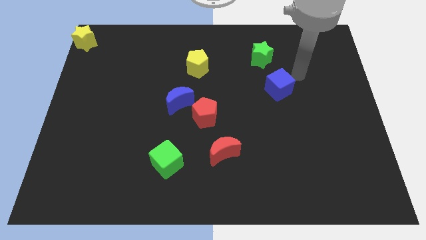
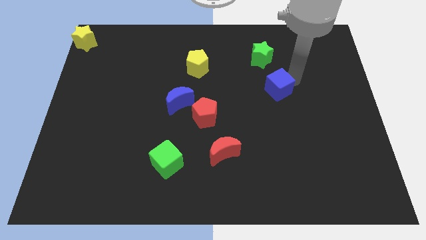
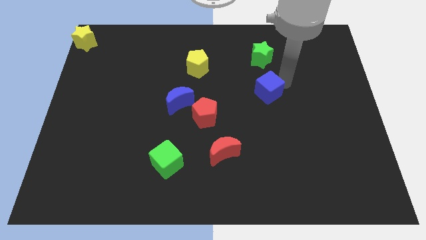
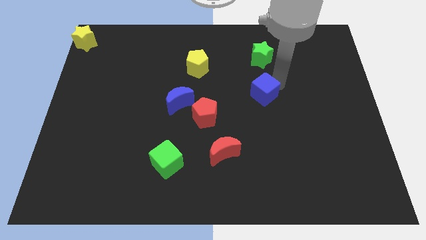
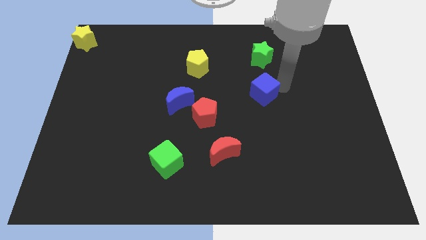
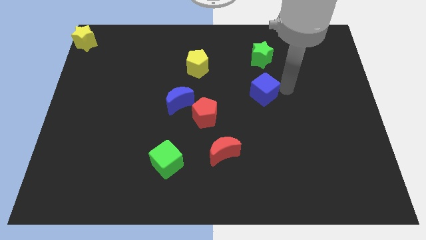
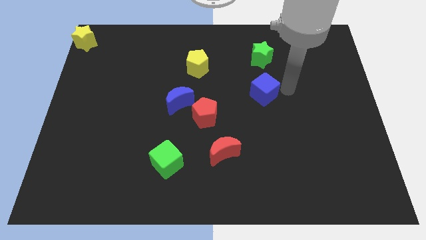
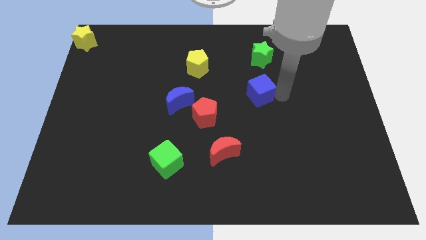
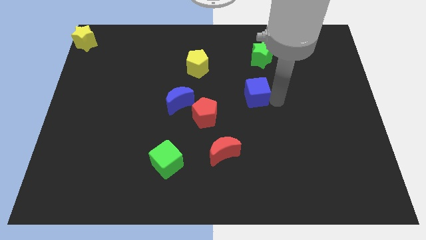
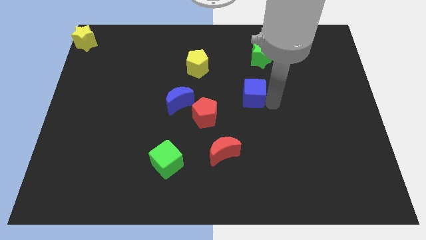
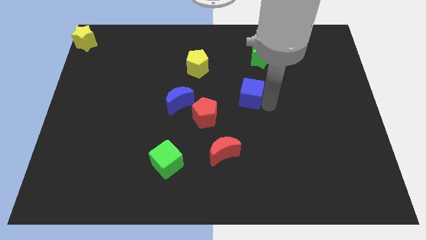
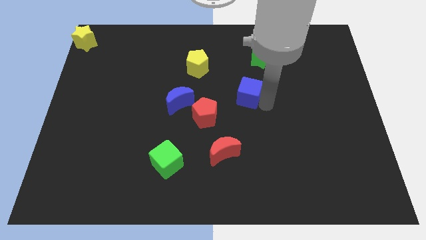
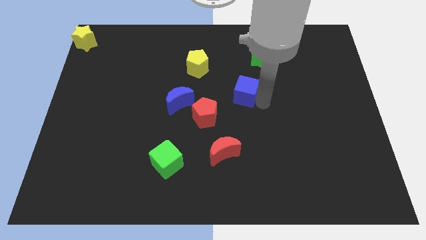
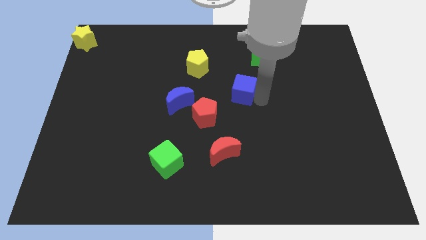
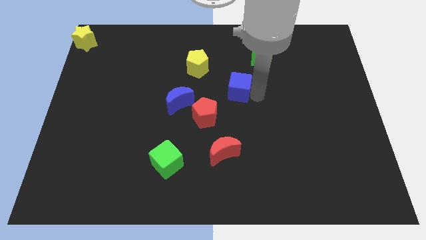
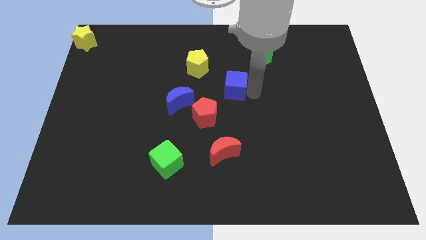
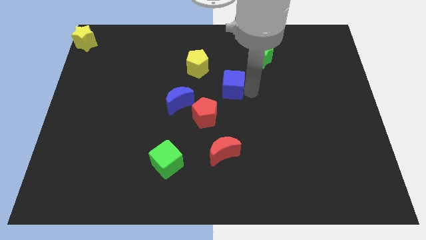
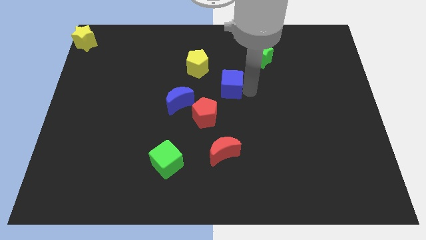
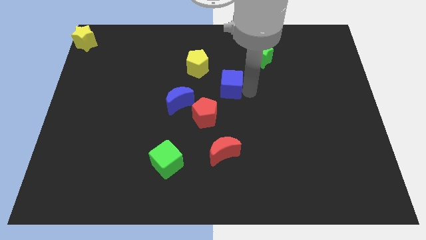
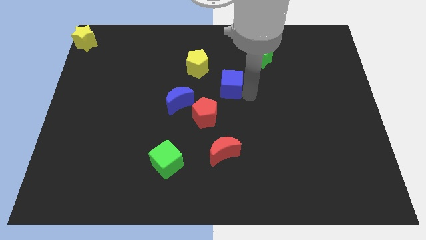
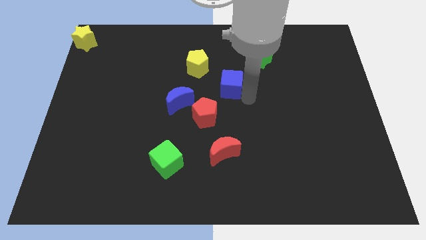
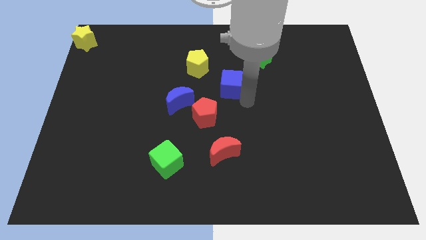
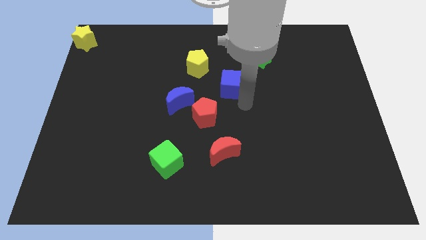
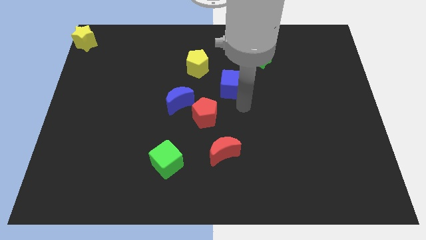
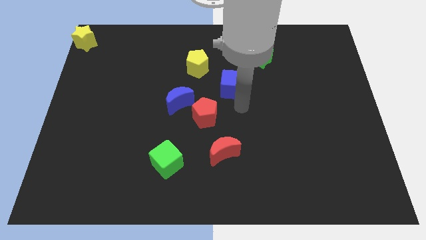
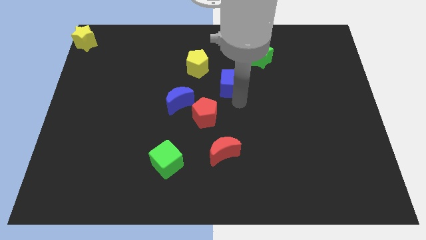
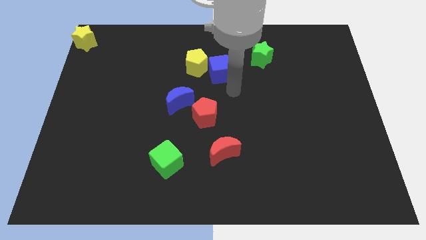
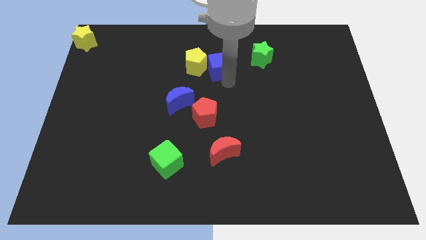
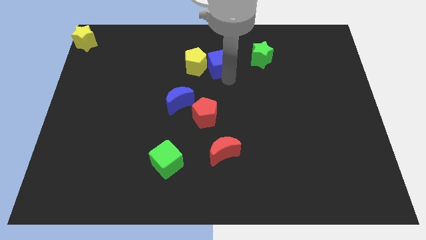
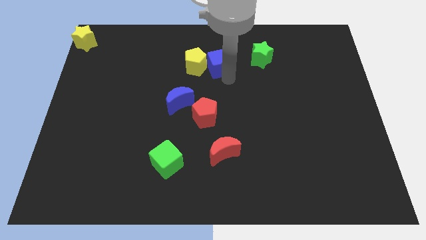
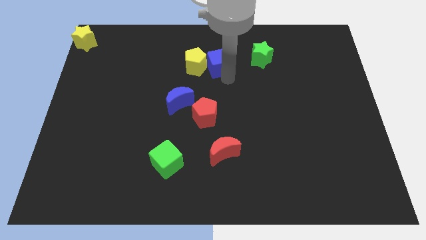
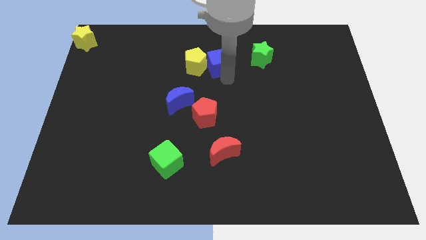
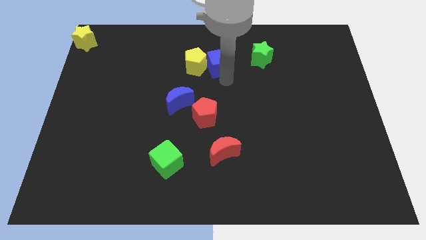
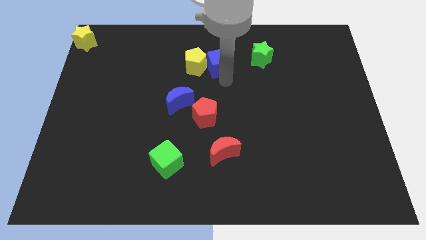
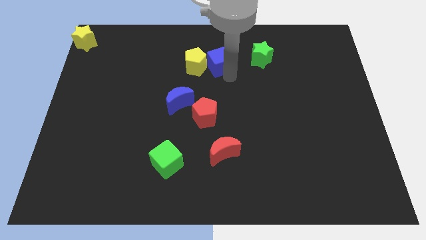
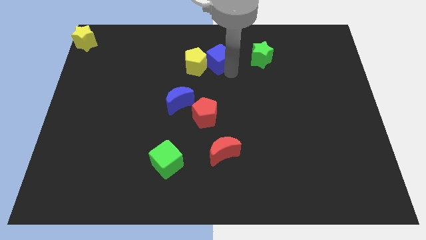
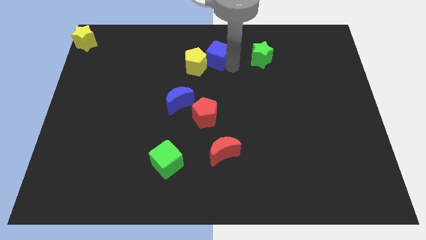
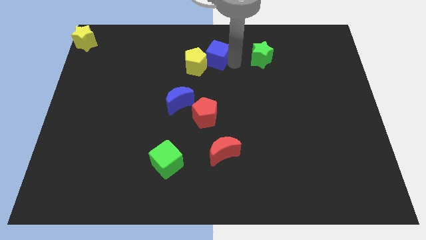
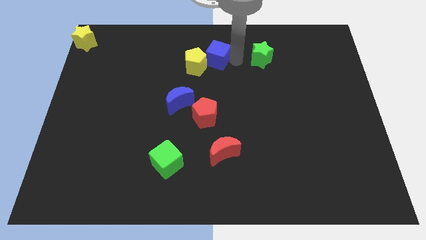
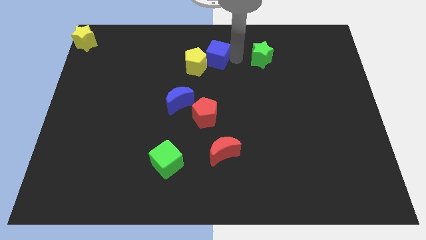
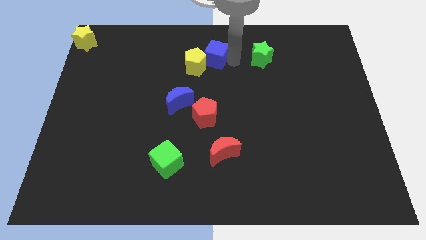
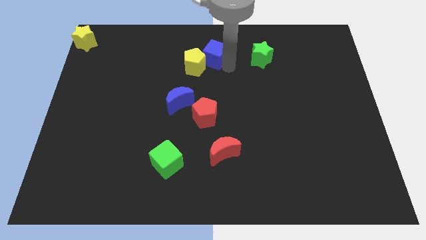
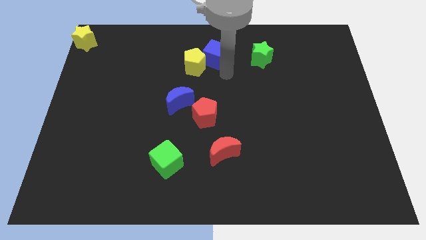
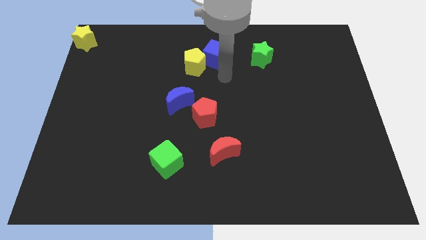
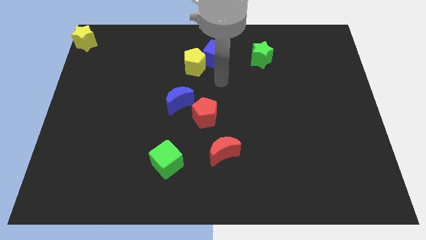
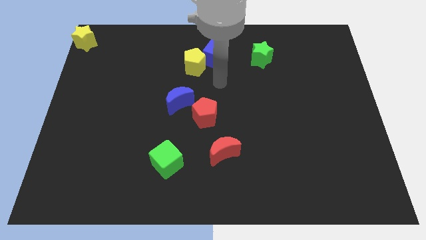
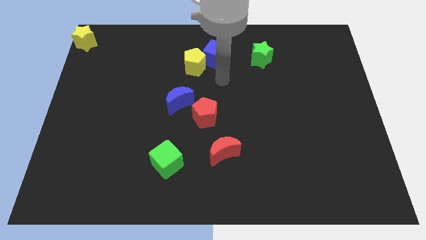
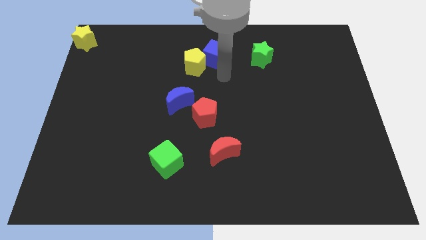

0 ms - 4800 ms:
move the blue cube to the top right side of the yellow pentagon

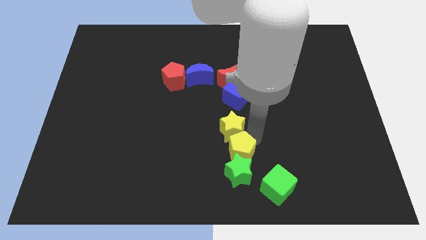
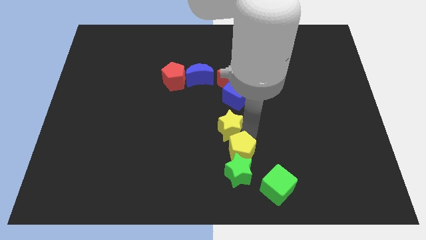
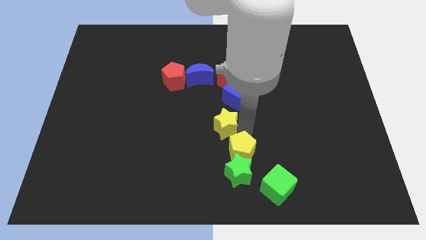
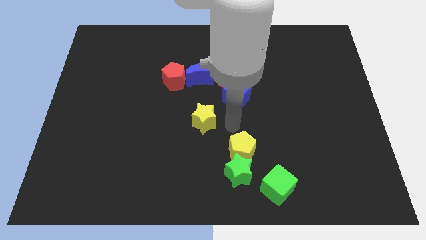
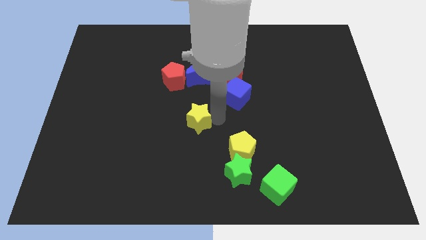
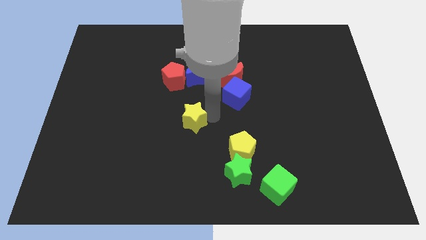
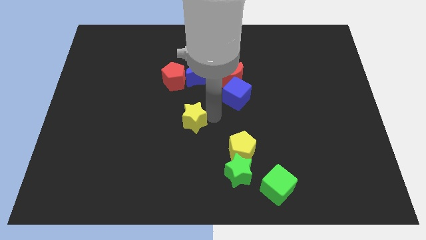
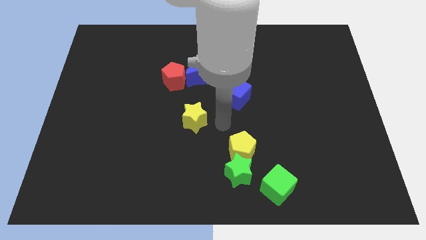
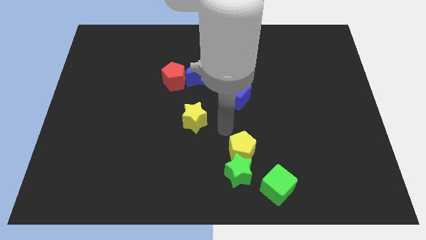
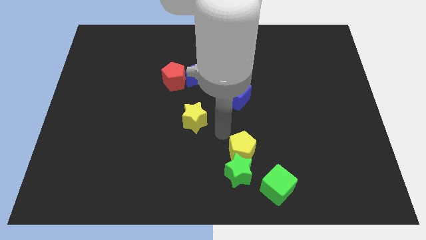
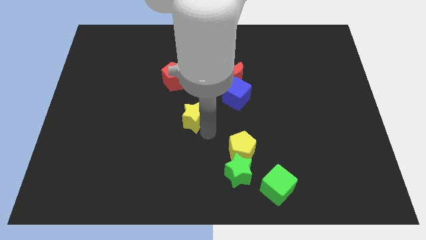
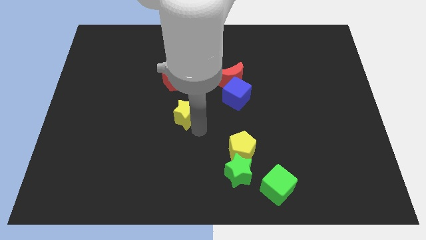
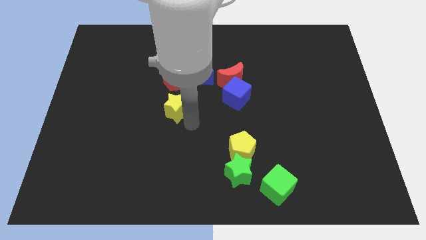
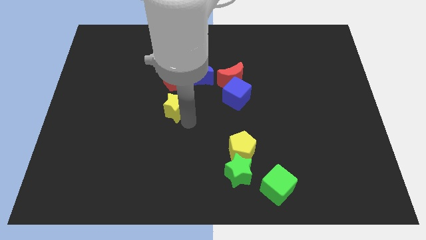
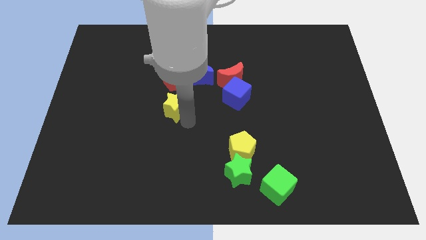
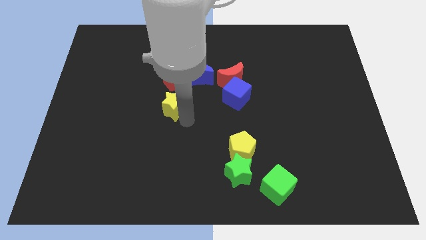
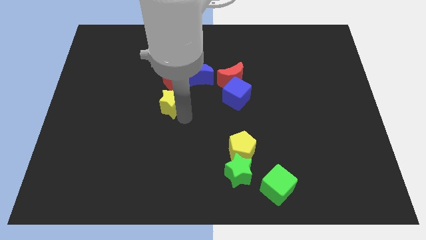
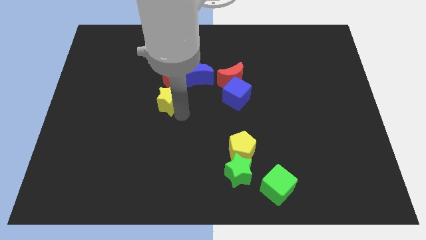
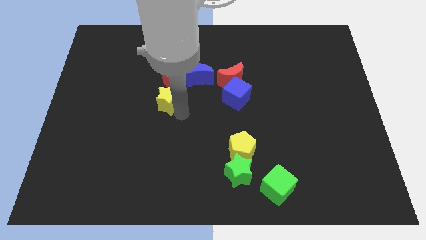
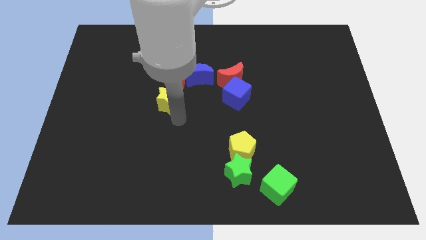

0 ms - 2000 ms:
separate the yellow star from the yellow pentagon

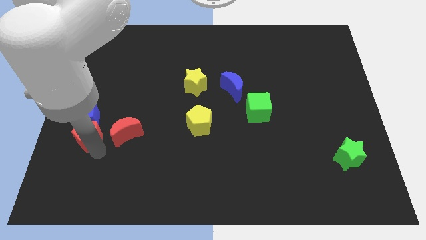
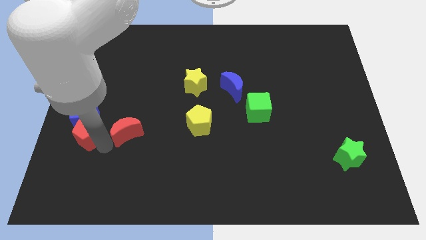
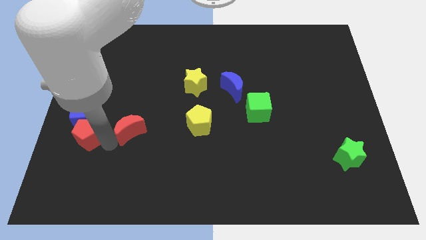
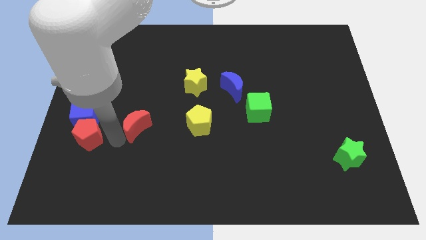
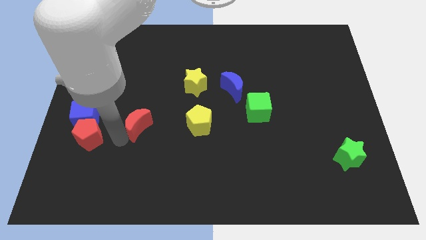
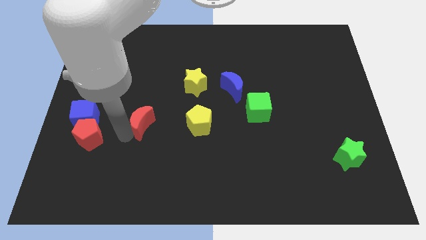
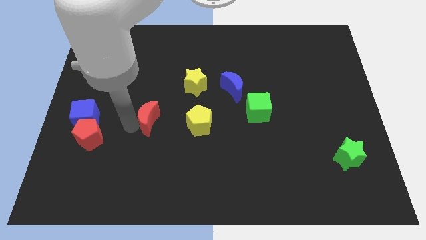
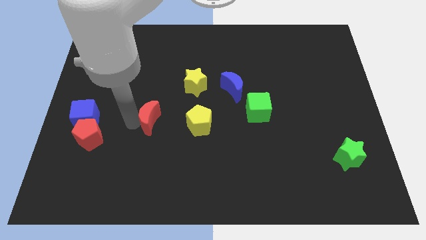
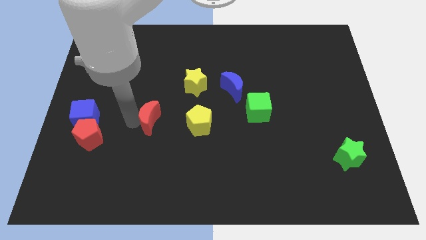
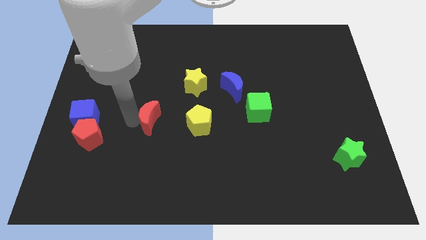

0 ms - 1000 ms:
separate the red moon from the red pentagon

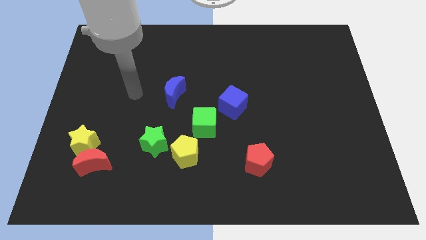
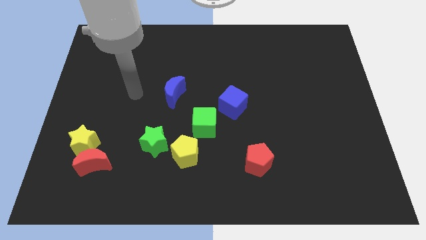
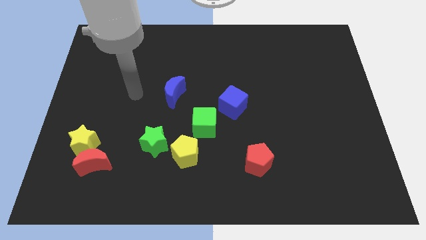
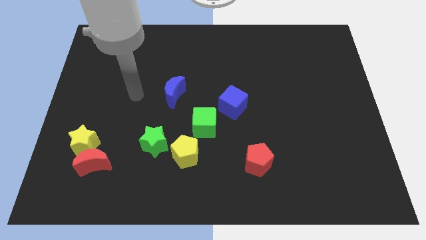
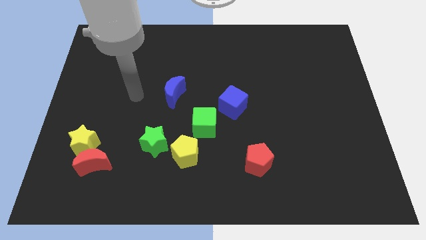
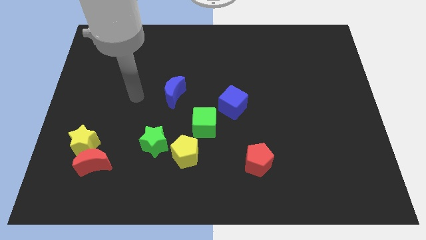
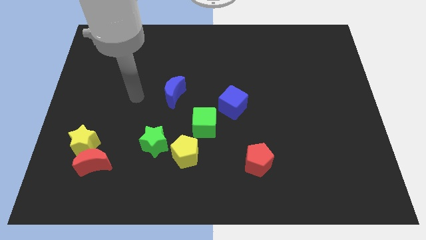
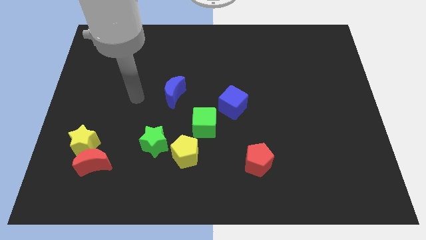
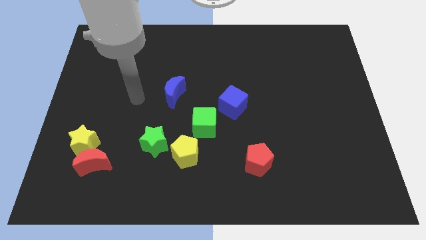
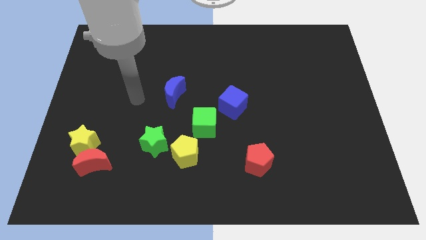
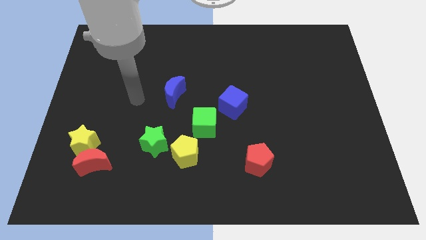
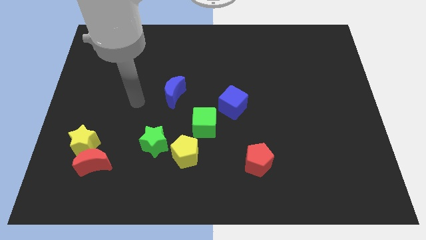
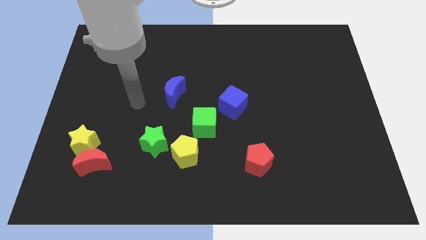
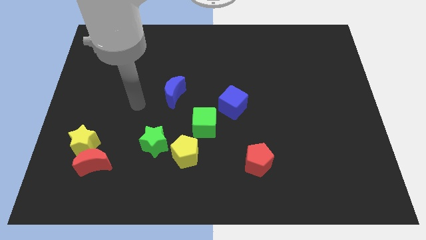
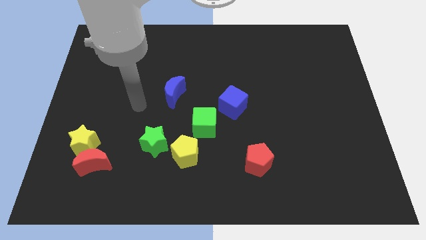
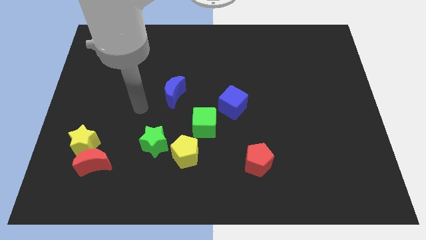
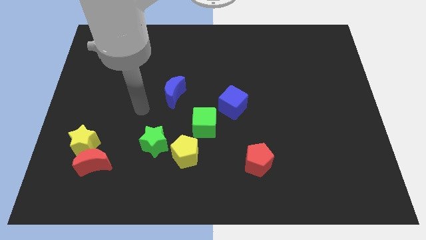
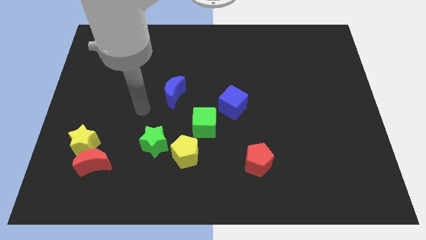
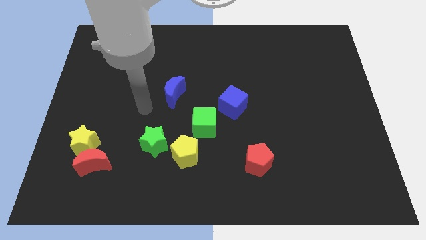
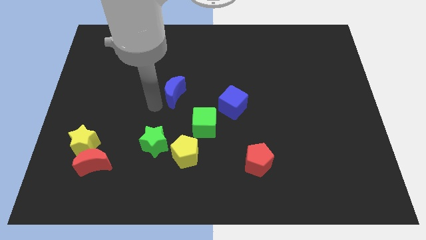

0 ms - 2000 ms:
move your arm towards the blue crescent
